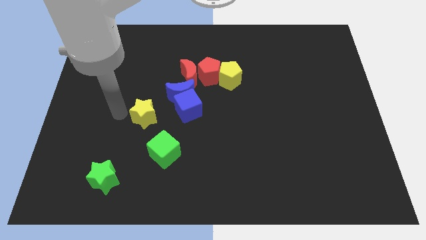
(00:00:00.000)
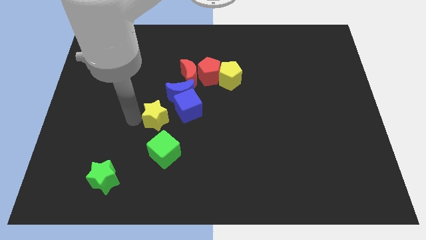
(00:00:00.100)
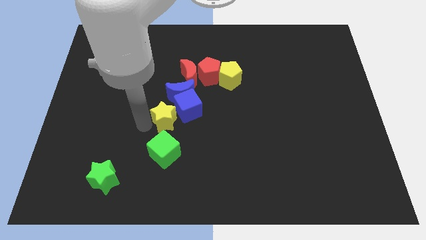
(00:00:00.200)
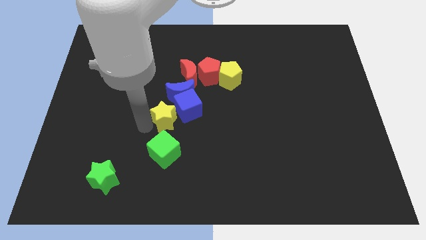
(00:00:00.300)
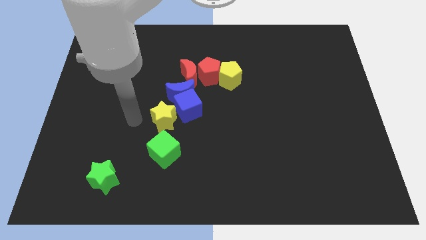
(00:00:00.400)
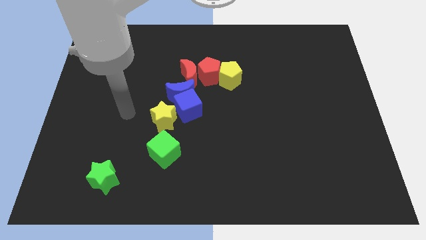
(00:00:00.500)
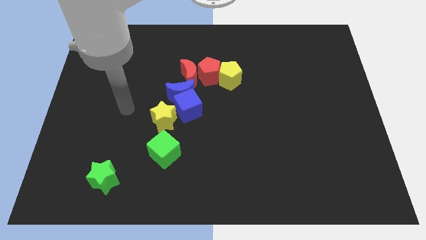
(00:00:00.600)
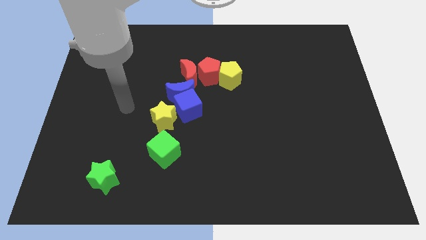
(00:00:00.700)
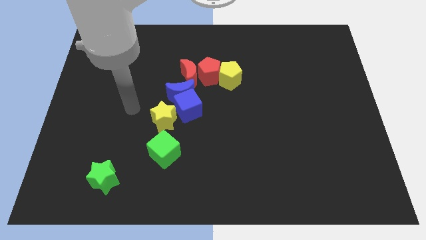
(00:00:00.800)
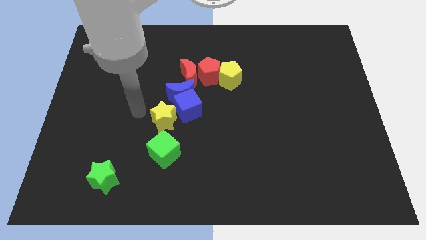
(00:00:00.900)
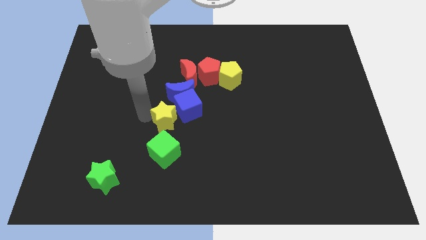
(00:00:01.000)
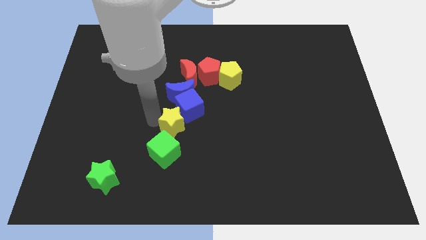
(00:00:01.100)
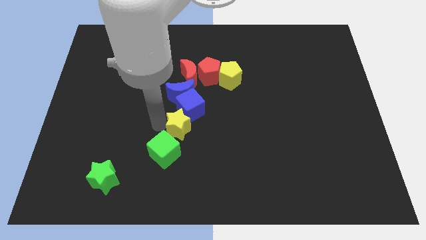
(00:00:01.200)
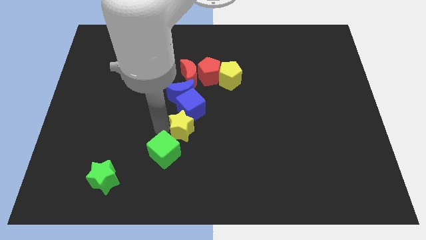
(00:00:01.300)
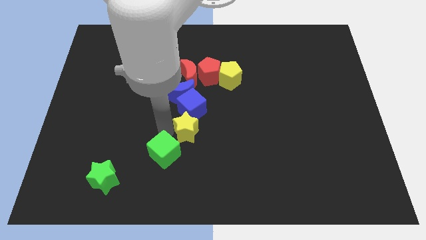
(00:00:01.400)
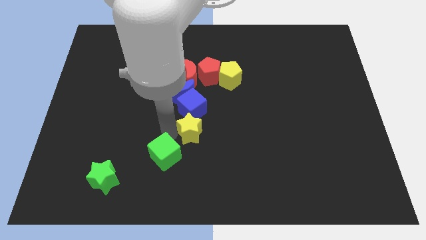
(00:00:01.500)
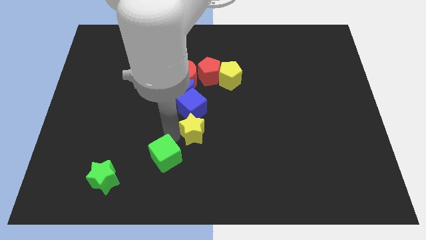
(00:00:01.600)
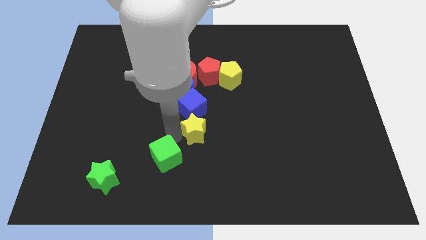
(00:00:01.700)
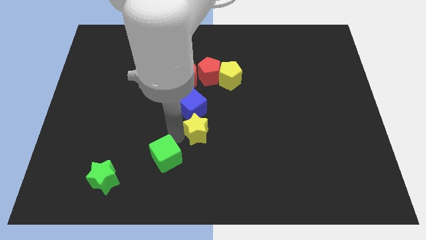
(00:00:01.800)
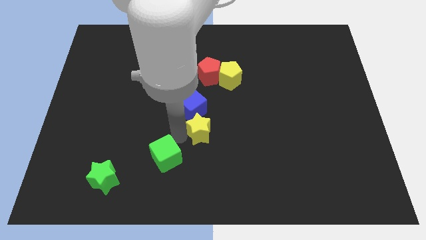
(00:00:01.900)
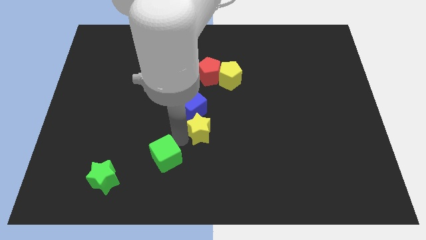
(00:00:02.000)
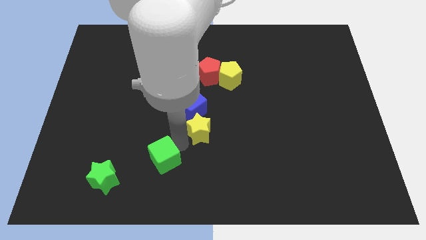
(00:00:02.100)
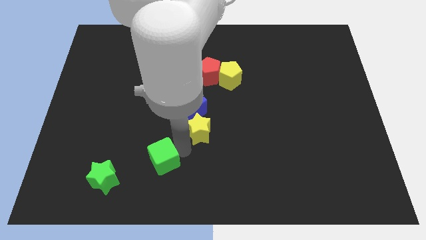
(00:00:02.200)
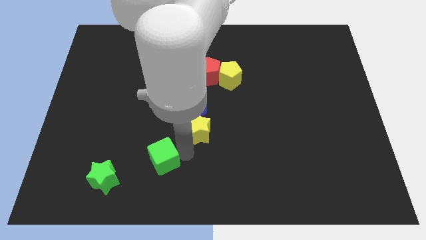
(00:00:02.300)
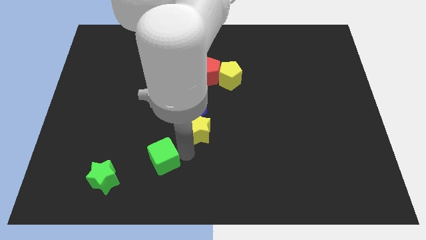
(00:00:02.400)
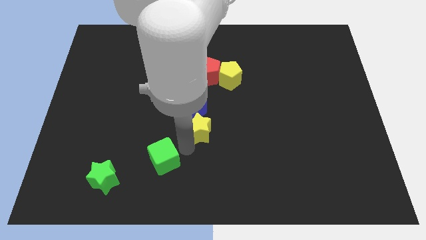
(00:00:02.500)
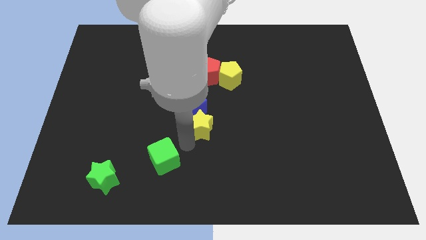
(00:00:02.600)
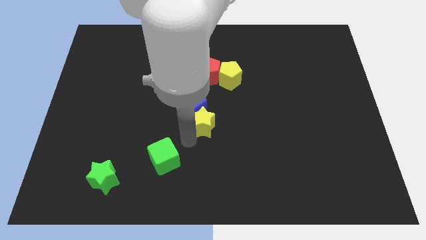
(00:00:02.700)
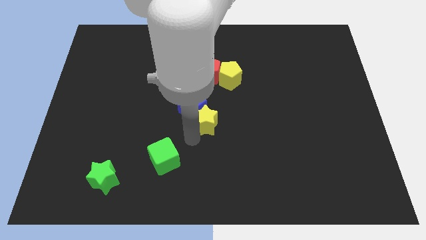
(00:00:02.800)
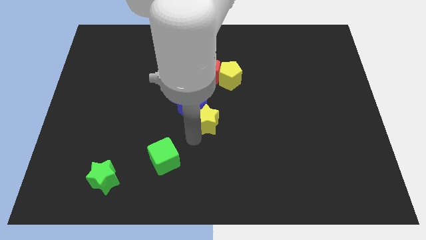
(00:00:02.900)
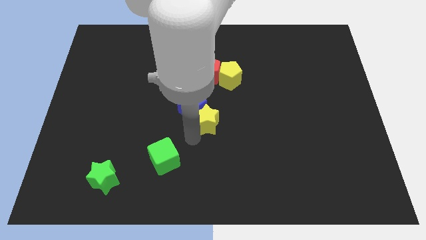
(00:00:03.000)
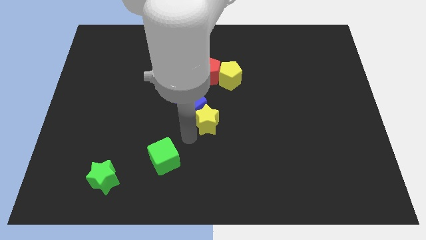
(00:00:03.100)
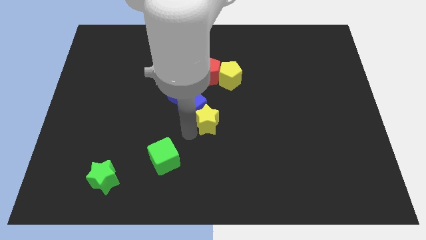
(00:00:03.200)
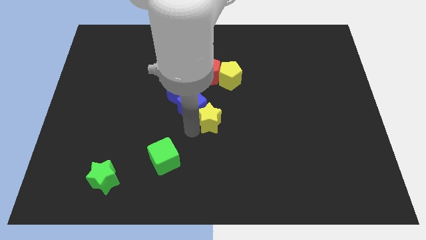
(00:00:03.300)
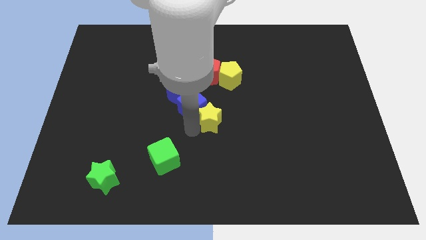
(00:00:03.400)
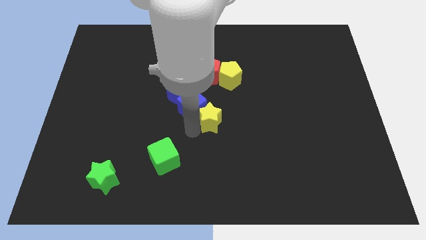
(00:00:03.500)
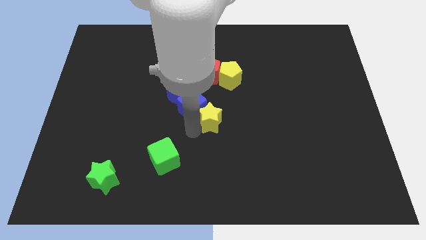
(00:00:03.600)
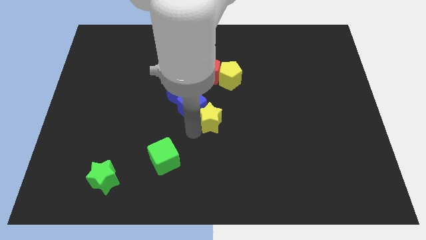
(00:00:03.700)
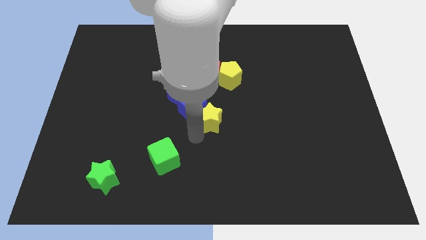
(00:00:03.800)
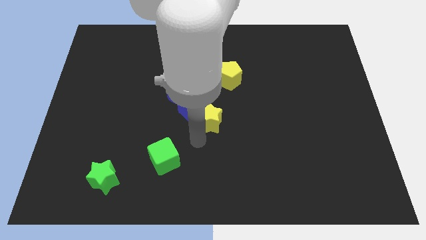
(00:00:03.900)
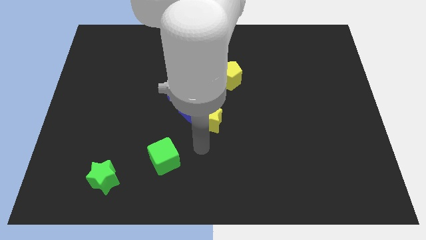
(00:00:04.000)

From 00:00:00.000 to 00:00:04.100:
place the yellow star to the center of the board

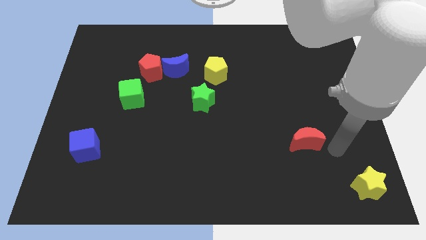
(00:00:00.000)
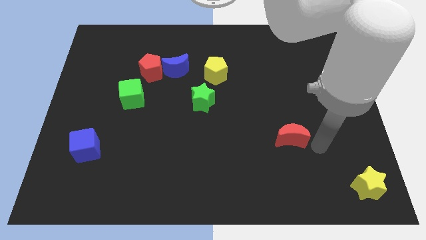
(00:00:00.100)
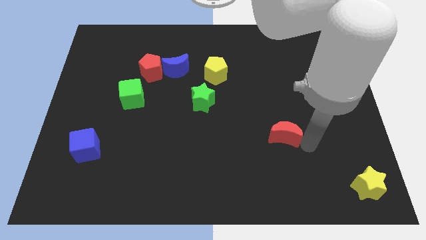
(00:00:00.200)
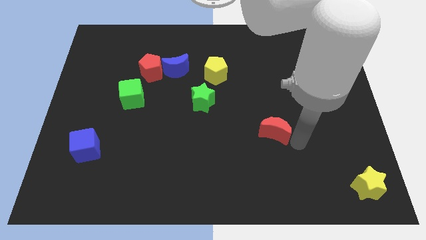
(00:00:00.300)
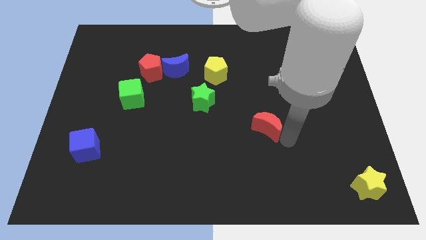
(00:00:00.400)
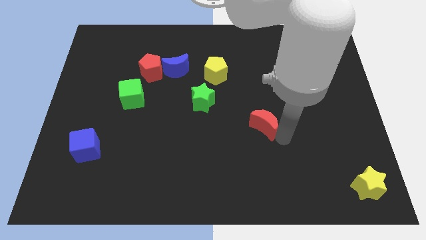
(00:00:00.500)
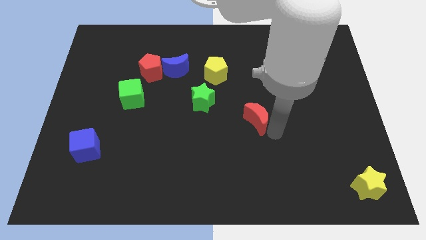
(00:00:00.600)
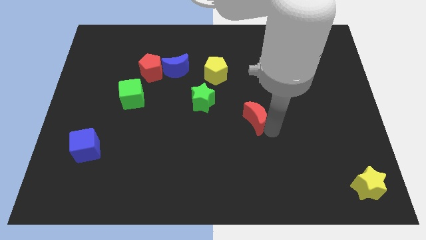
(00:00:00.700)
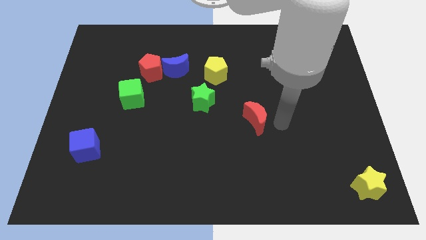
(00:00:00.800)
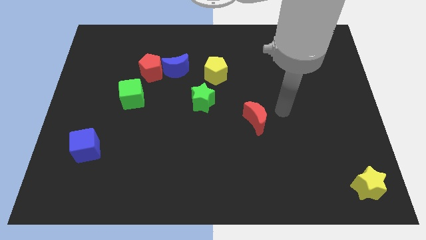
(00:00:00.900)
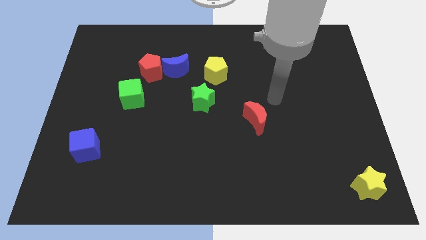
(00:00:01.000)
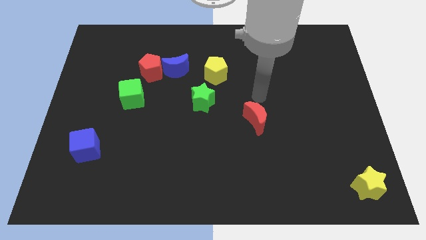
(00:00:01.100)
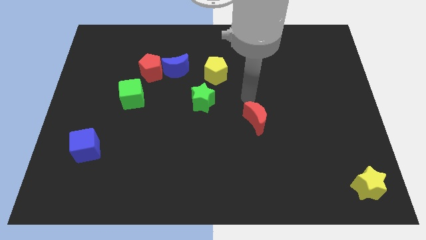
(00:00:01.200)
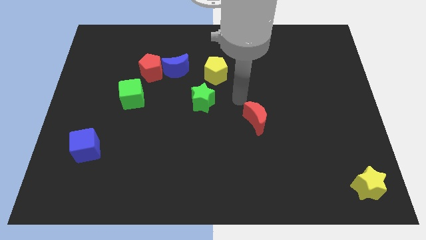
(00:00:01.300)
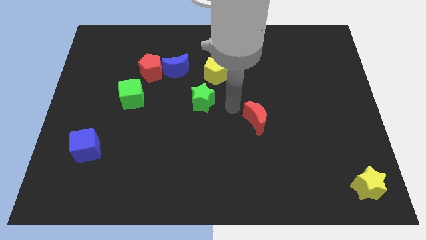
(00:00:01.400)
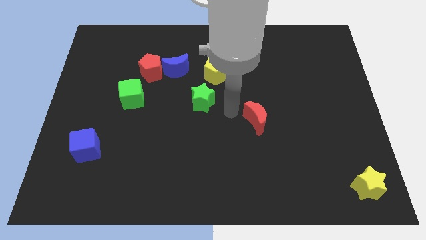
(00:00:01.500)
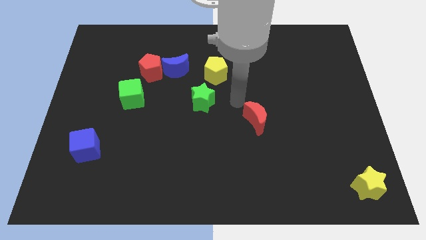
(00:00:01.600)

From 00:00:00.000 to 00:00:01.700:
push the red crescent diagonally on the bottom right side of the green star

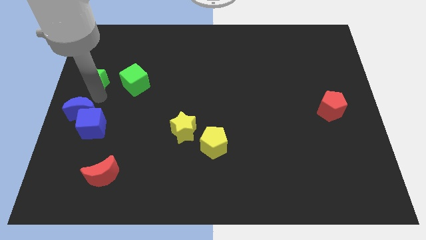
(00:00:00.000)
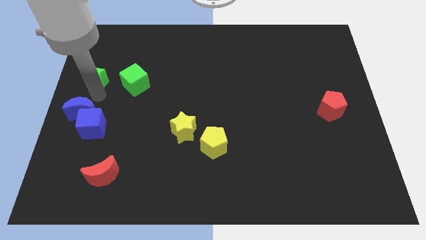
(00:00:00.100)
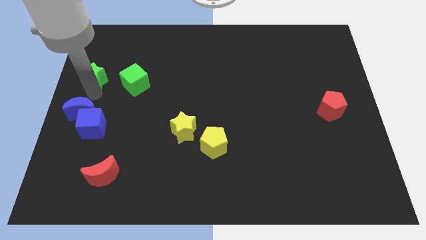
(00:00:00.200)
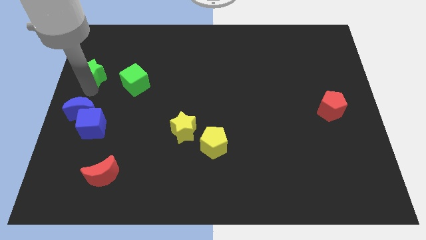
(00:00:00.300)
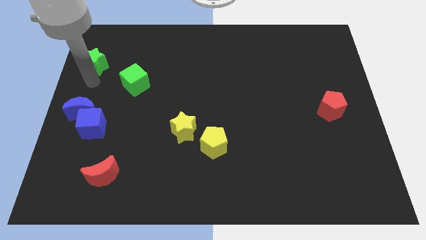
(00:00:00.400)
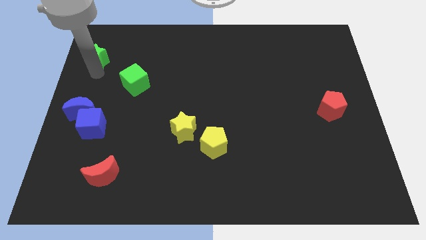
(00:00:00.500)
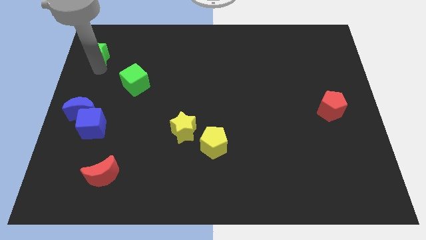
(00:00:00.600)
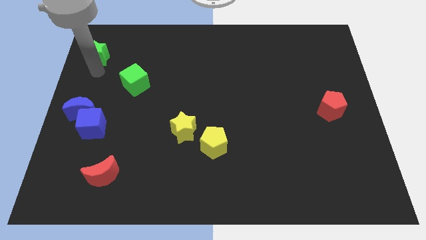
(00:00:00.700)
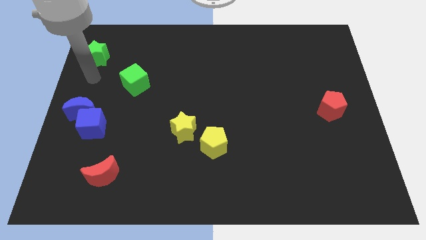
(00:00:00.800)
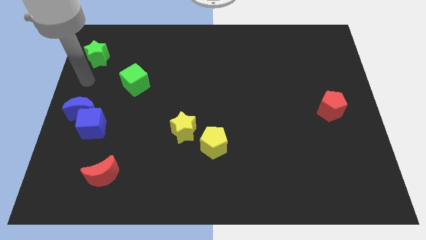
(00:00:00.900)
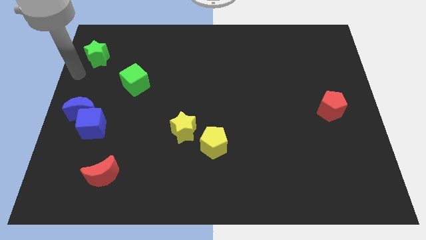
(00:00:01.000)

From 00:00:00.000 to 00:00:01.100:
push green star up slightly

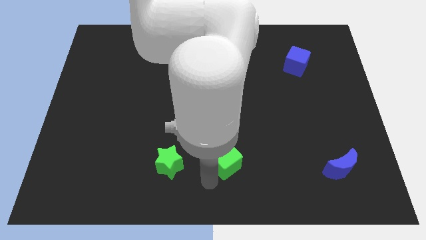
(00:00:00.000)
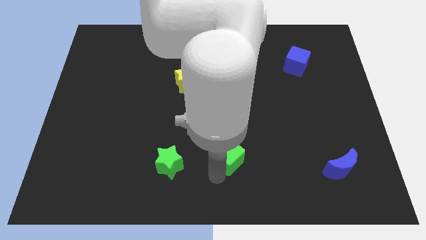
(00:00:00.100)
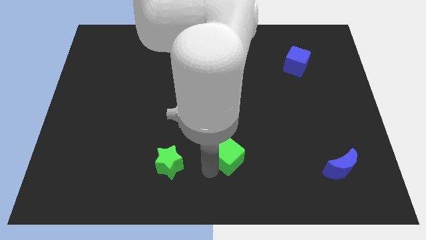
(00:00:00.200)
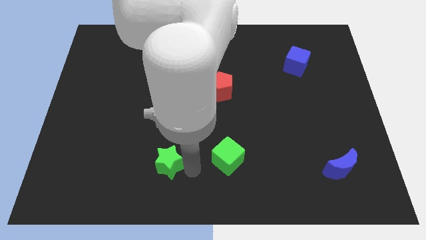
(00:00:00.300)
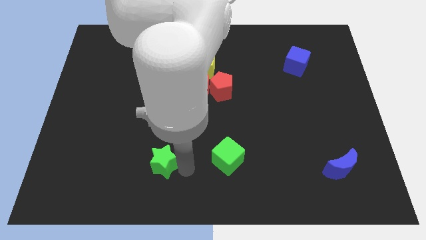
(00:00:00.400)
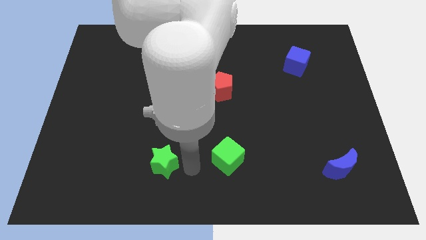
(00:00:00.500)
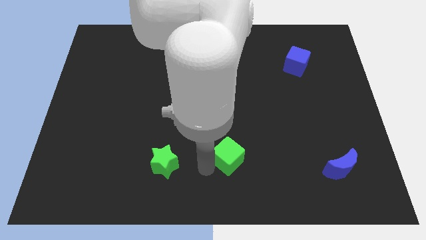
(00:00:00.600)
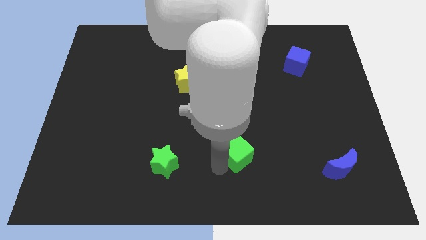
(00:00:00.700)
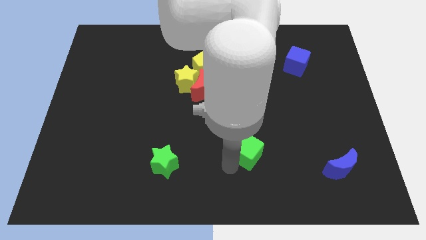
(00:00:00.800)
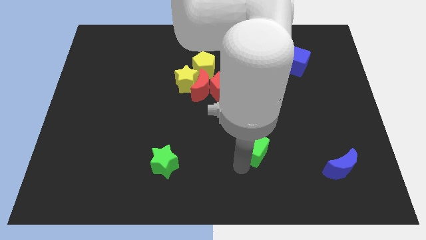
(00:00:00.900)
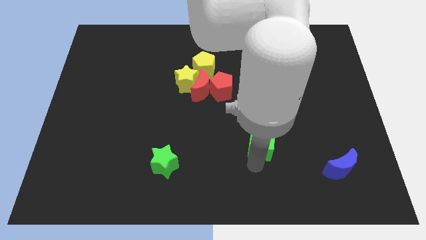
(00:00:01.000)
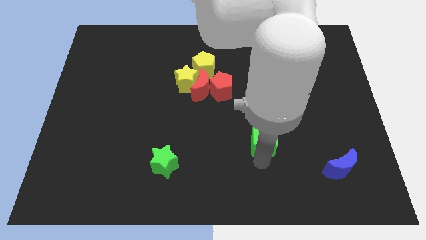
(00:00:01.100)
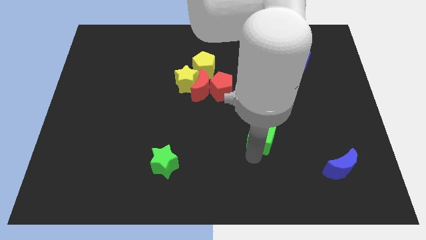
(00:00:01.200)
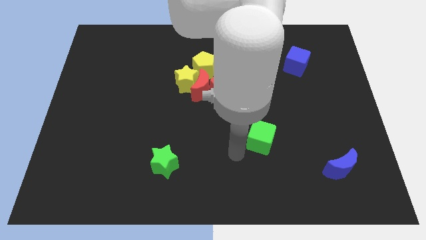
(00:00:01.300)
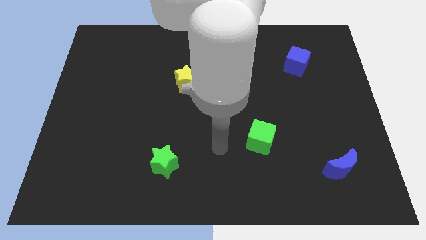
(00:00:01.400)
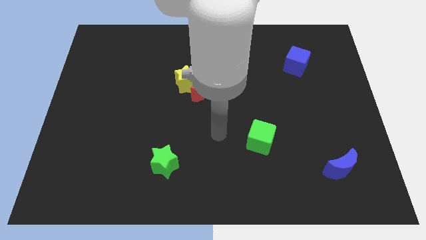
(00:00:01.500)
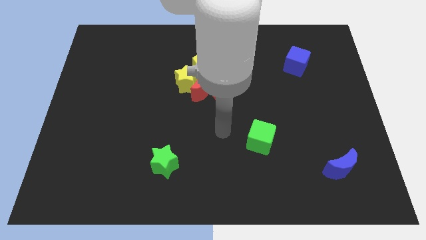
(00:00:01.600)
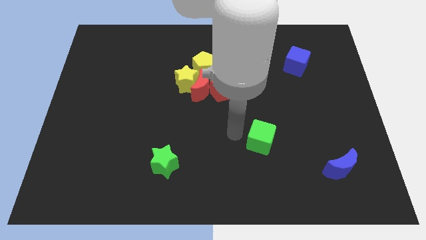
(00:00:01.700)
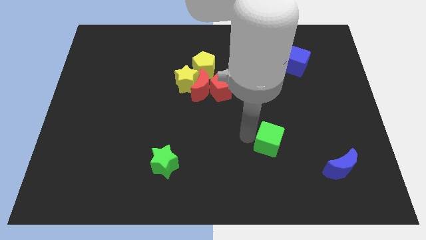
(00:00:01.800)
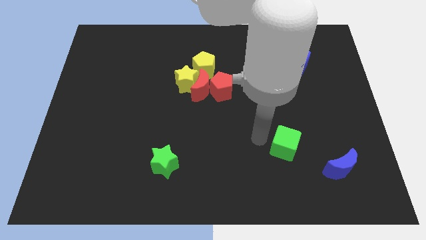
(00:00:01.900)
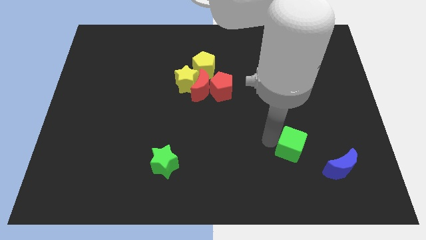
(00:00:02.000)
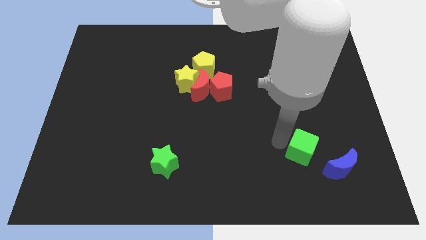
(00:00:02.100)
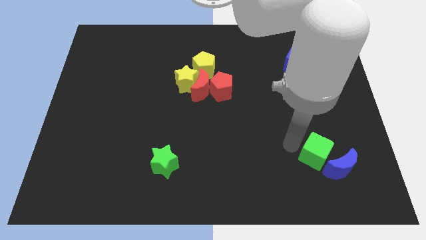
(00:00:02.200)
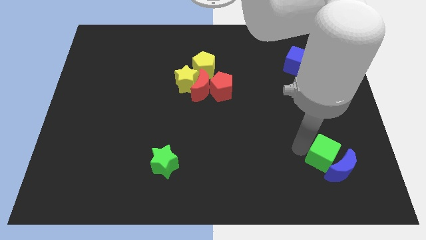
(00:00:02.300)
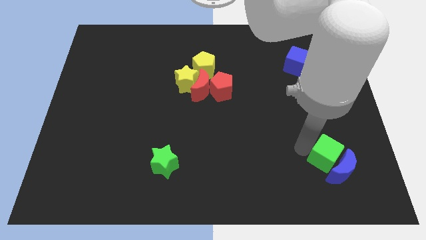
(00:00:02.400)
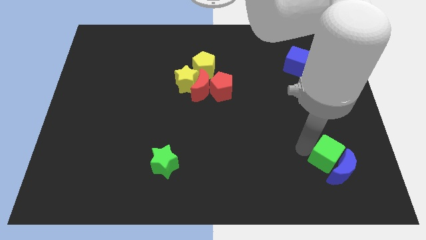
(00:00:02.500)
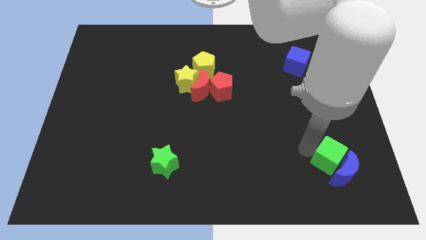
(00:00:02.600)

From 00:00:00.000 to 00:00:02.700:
move green cube towards the blue crescent
